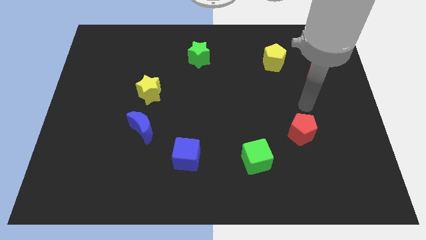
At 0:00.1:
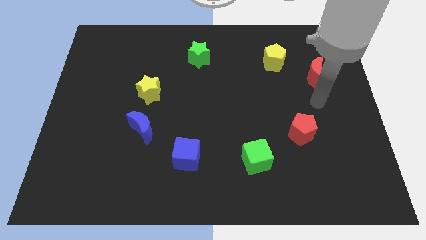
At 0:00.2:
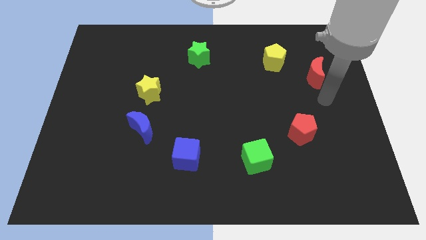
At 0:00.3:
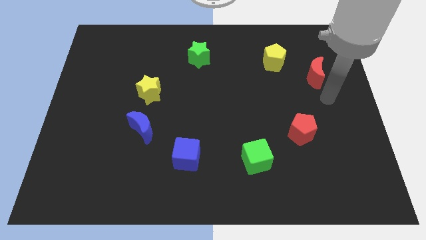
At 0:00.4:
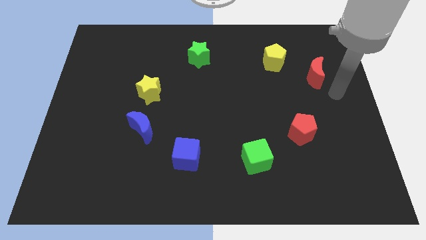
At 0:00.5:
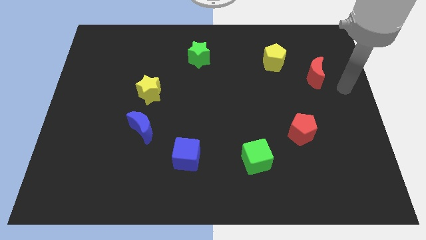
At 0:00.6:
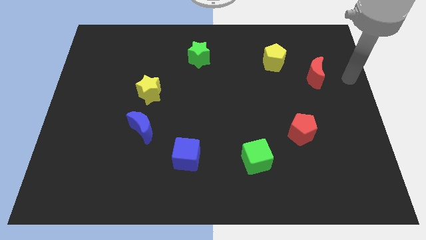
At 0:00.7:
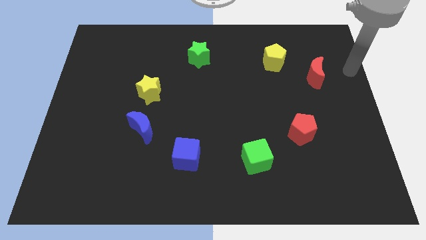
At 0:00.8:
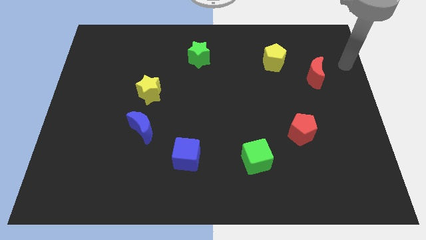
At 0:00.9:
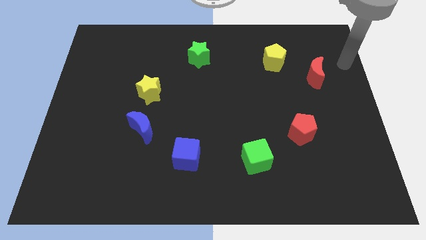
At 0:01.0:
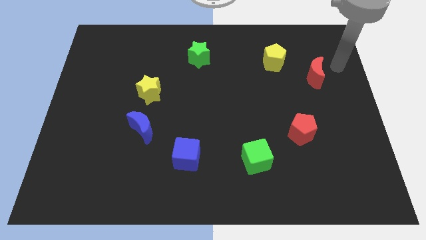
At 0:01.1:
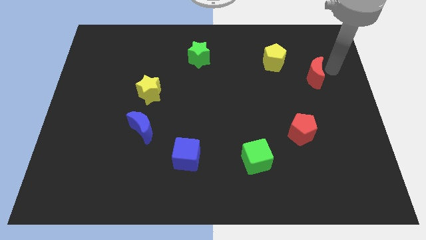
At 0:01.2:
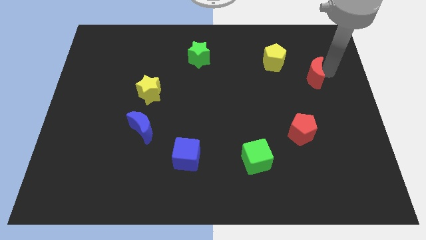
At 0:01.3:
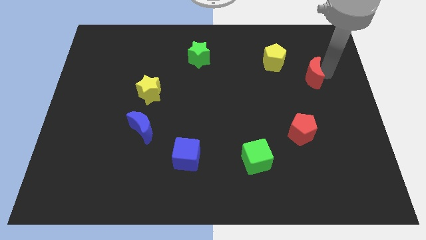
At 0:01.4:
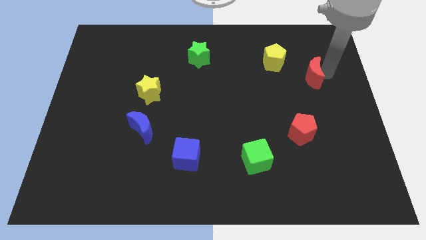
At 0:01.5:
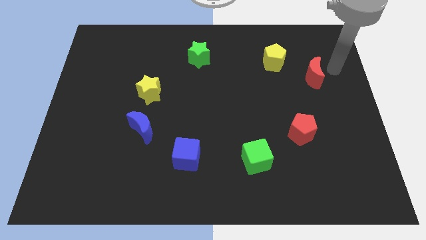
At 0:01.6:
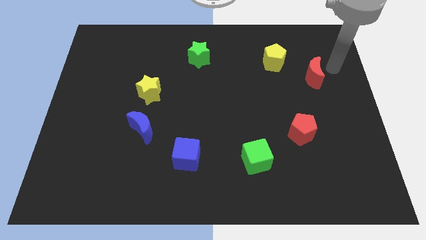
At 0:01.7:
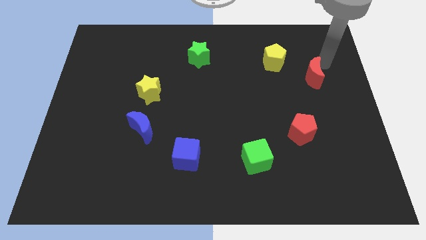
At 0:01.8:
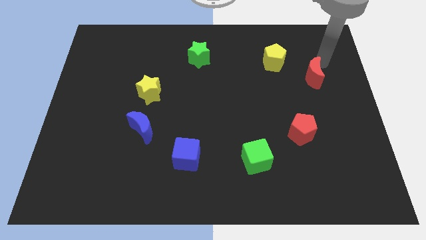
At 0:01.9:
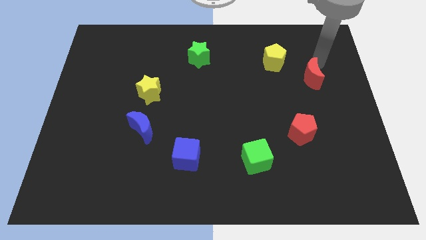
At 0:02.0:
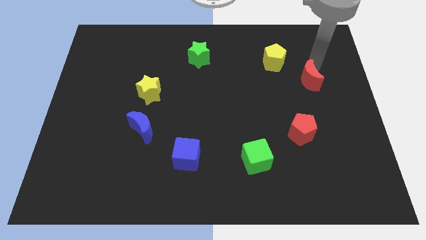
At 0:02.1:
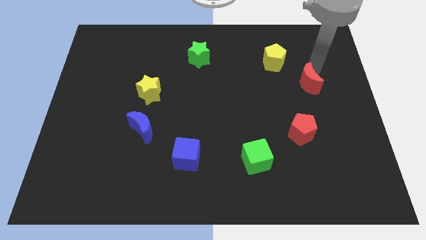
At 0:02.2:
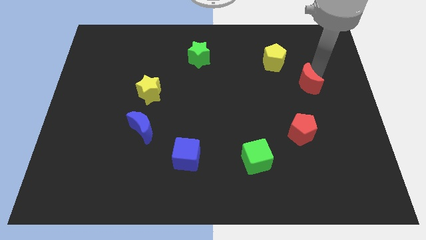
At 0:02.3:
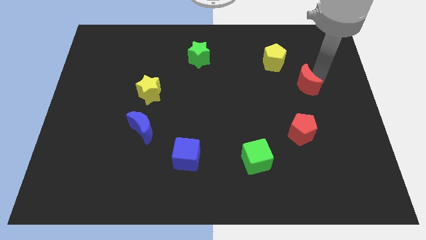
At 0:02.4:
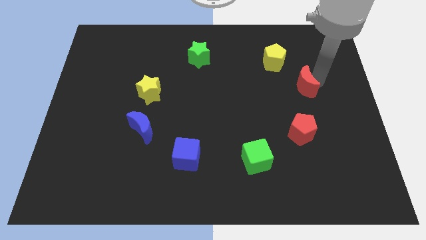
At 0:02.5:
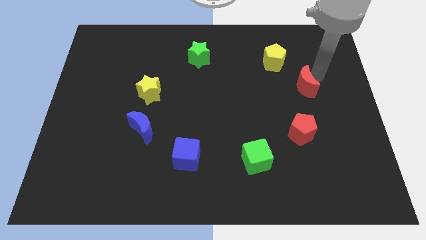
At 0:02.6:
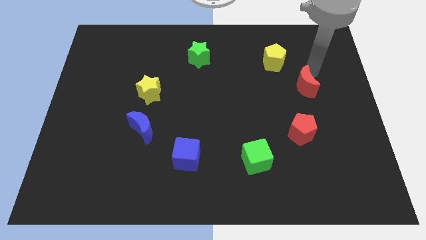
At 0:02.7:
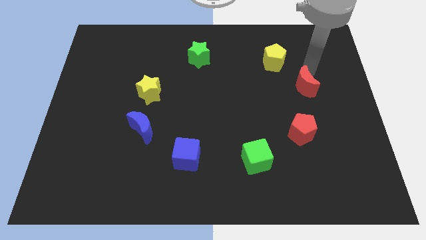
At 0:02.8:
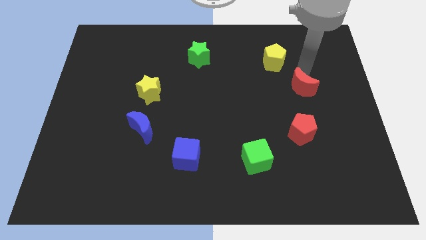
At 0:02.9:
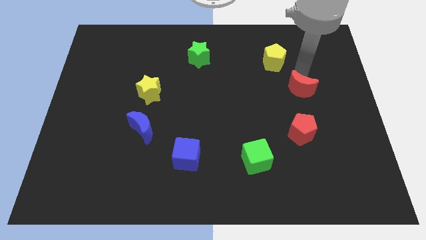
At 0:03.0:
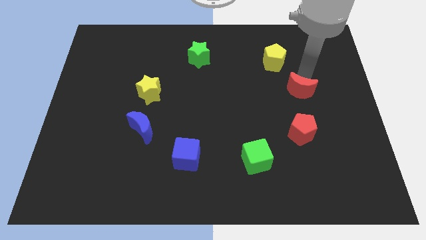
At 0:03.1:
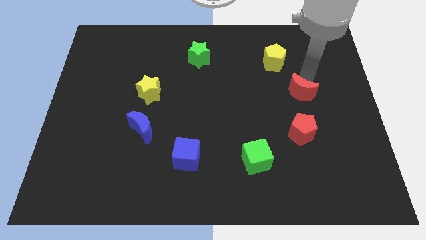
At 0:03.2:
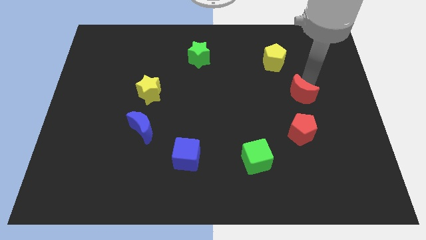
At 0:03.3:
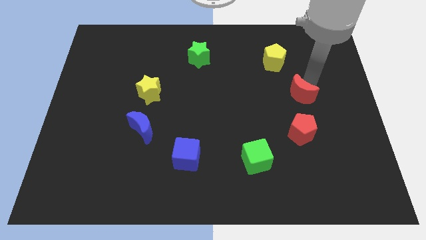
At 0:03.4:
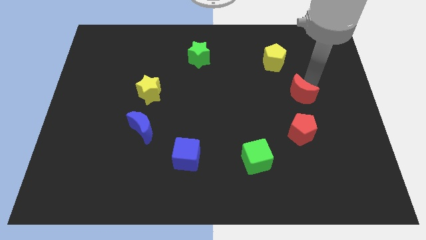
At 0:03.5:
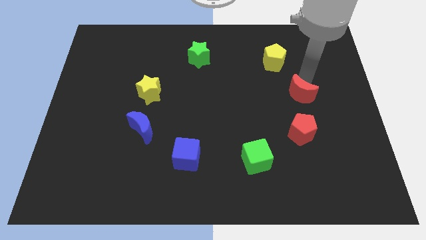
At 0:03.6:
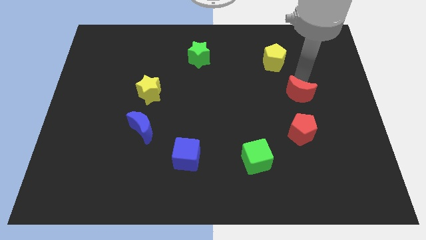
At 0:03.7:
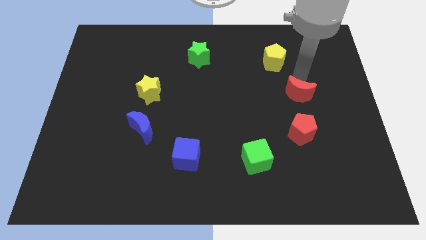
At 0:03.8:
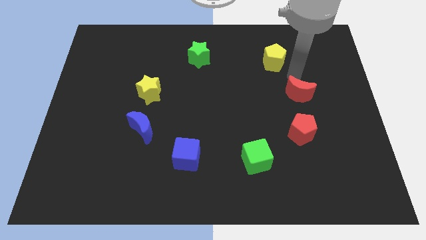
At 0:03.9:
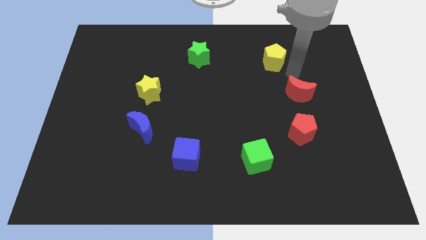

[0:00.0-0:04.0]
move the crescent slightly towards the red pentagon

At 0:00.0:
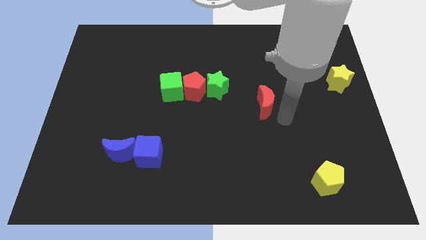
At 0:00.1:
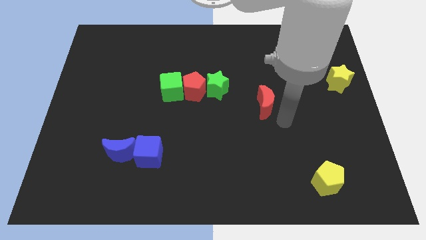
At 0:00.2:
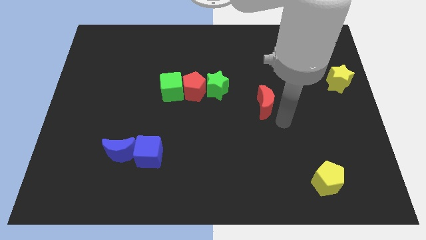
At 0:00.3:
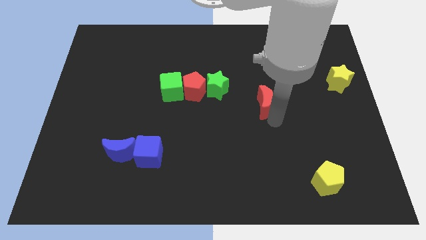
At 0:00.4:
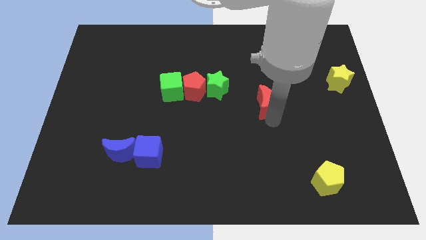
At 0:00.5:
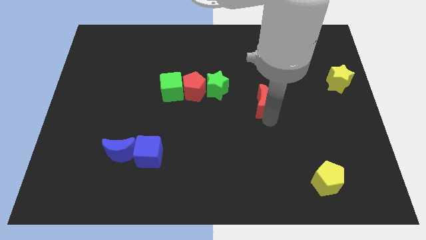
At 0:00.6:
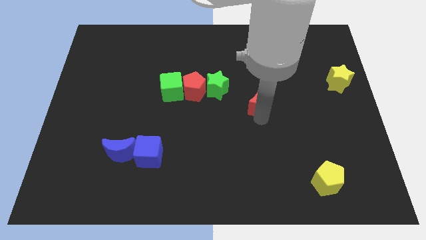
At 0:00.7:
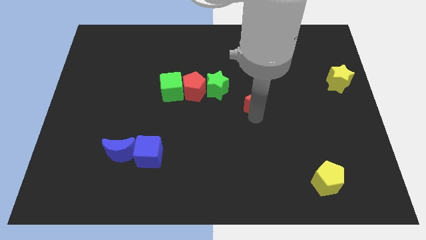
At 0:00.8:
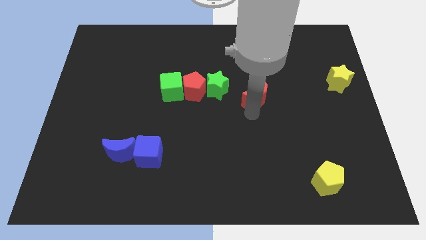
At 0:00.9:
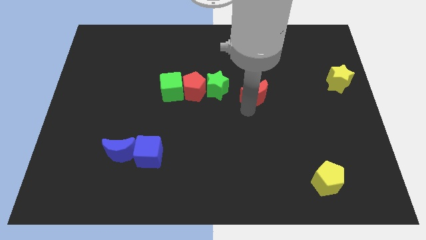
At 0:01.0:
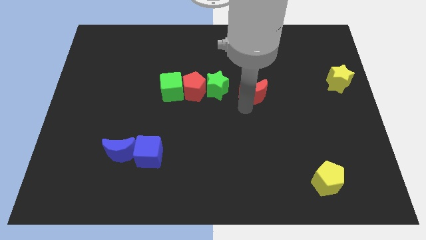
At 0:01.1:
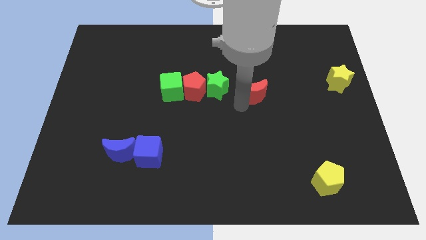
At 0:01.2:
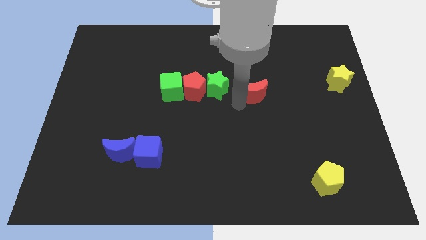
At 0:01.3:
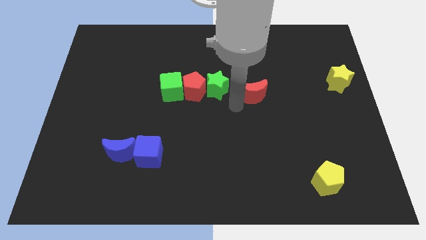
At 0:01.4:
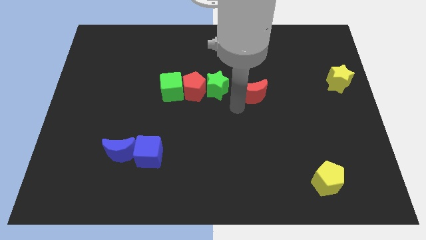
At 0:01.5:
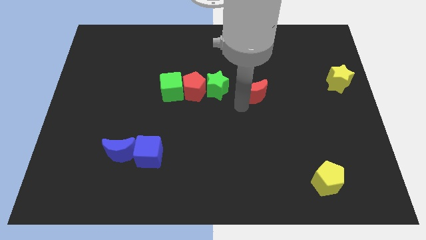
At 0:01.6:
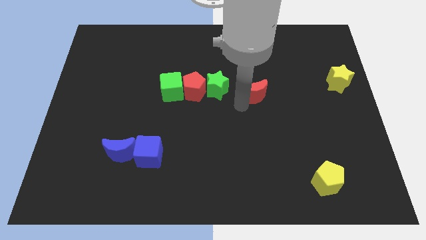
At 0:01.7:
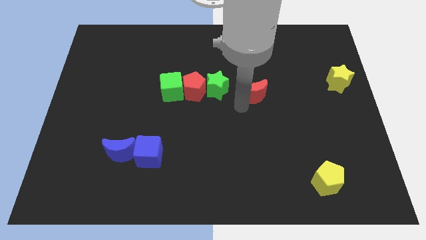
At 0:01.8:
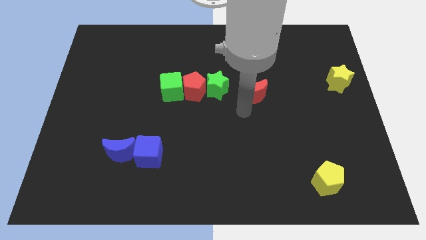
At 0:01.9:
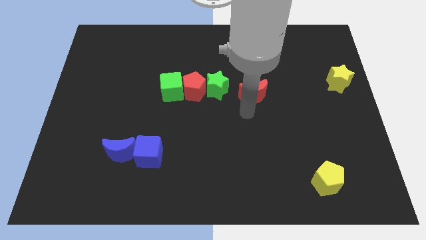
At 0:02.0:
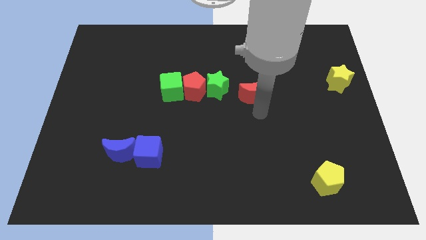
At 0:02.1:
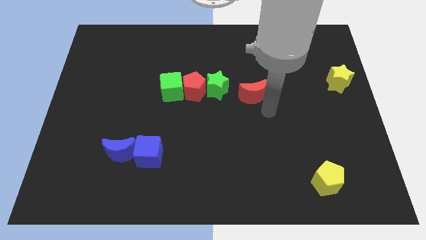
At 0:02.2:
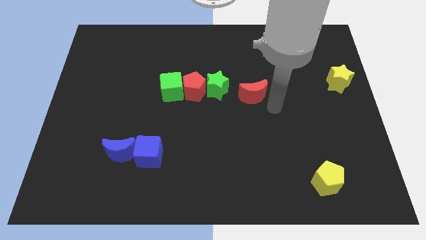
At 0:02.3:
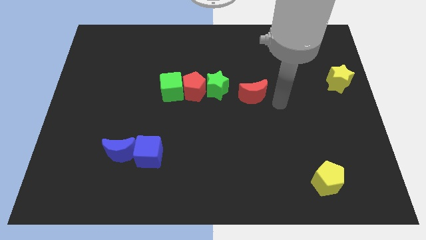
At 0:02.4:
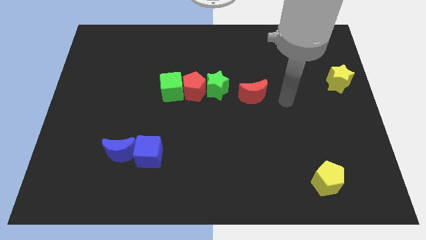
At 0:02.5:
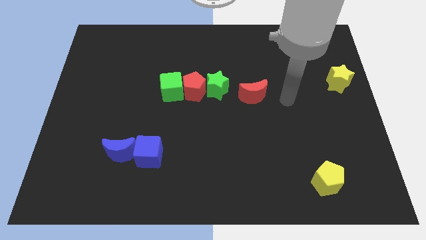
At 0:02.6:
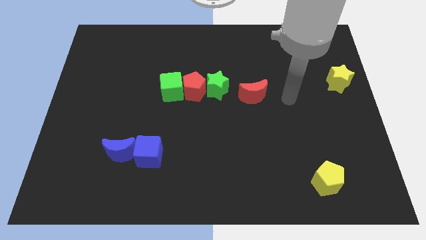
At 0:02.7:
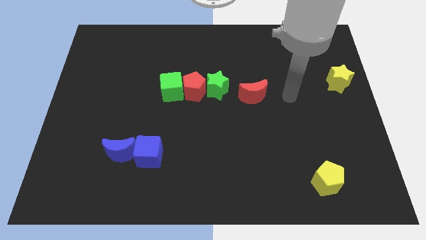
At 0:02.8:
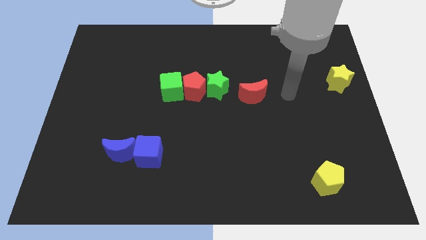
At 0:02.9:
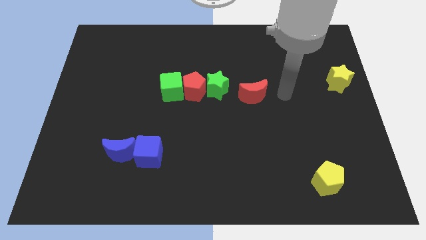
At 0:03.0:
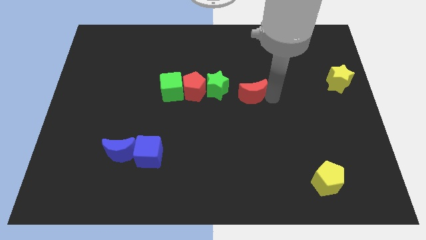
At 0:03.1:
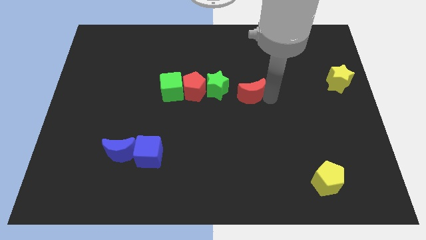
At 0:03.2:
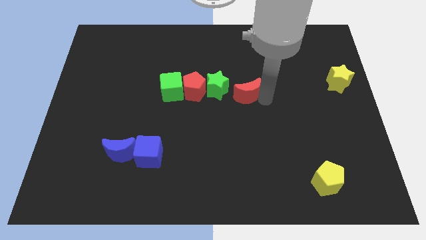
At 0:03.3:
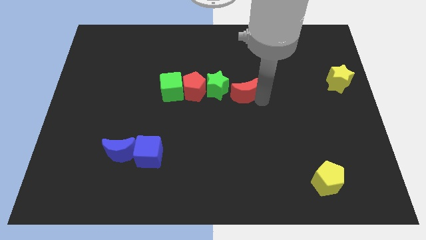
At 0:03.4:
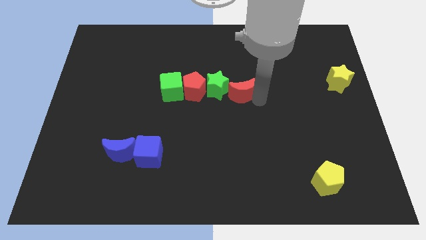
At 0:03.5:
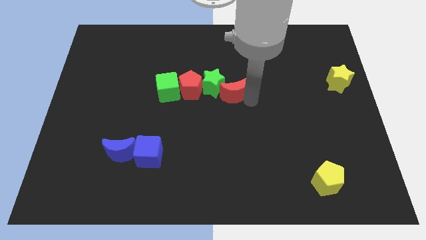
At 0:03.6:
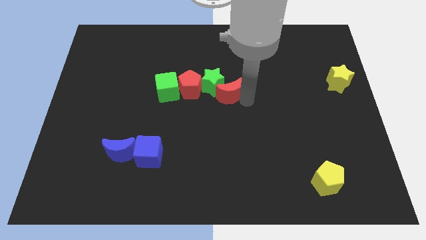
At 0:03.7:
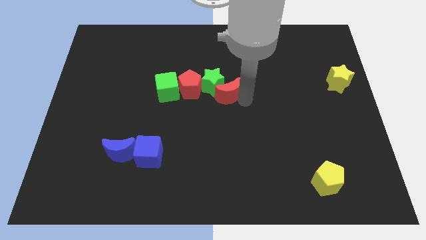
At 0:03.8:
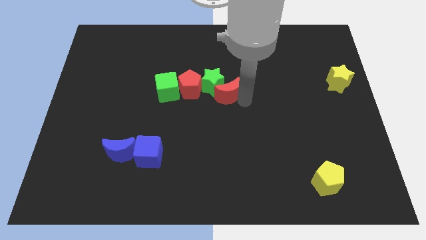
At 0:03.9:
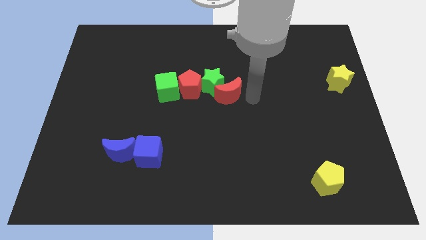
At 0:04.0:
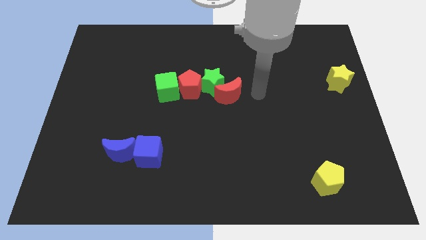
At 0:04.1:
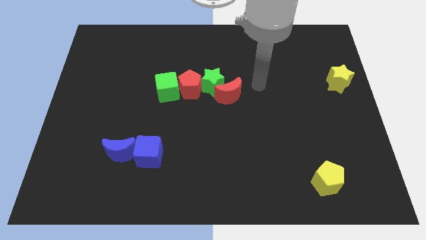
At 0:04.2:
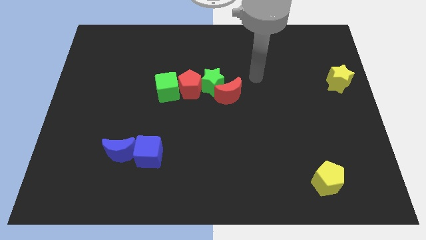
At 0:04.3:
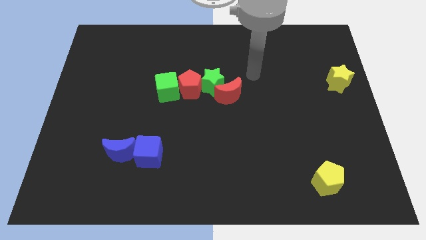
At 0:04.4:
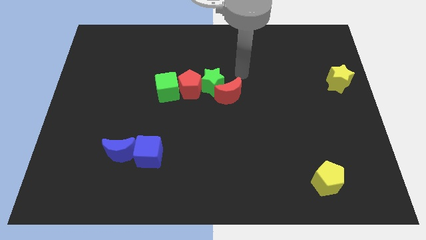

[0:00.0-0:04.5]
move the red crescent into the green star

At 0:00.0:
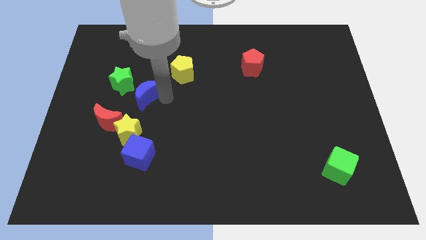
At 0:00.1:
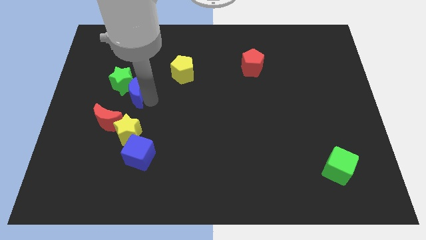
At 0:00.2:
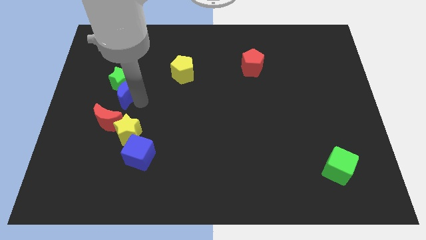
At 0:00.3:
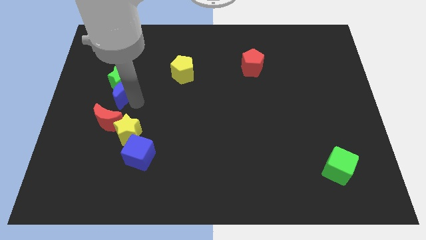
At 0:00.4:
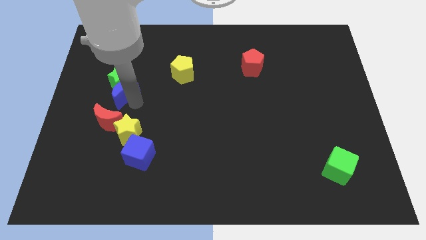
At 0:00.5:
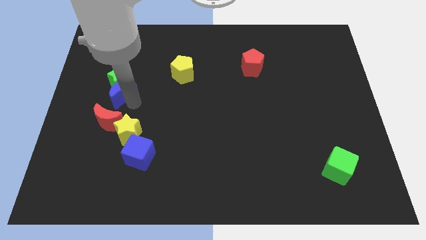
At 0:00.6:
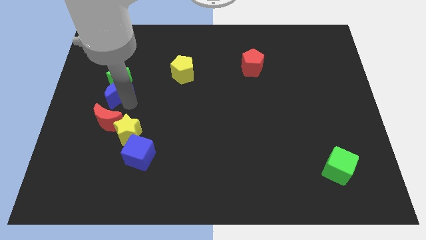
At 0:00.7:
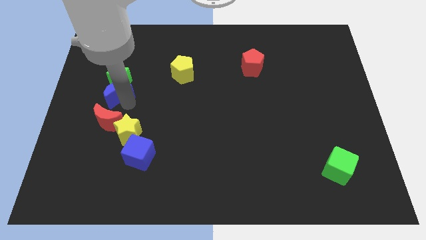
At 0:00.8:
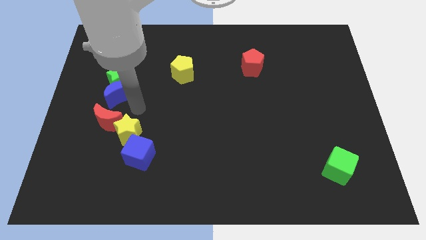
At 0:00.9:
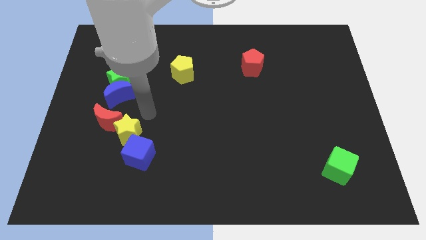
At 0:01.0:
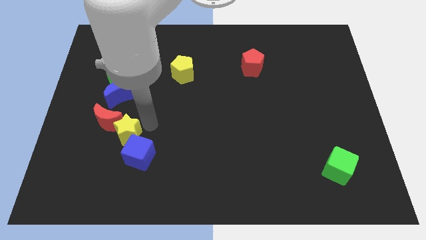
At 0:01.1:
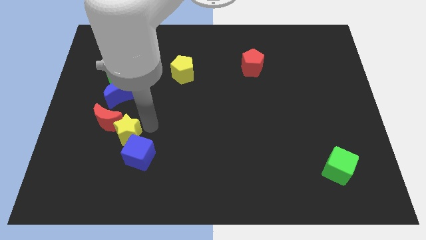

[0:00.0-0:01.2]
slide the blue moon to the top side of the red moon
